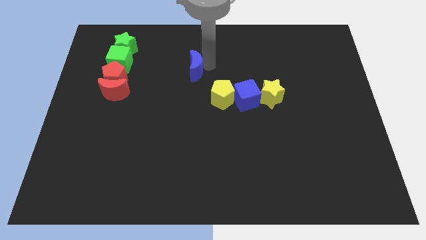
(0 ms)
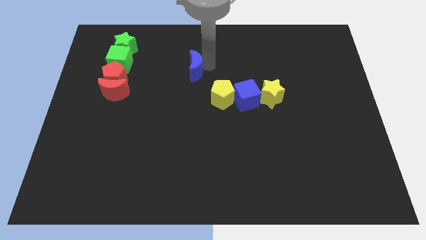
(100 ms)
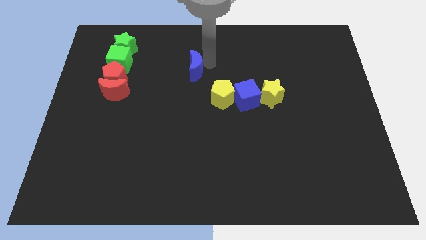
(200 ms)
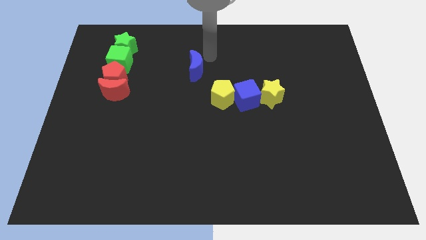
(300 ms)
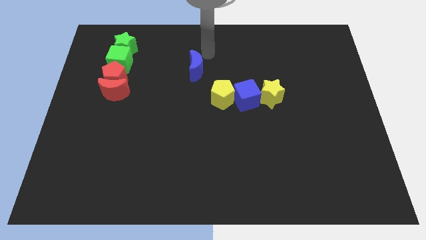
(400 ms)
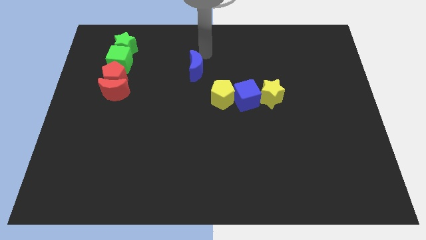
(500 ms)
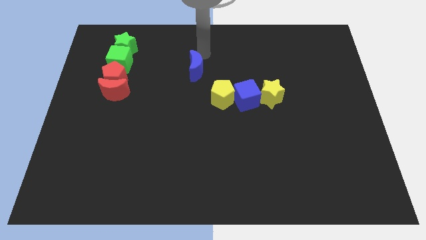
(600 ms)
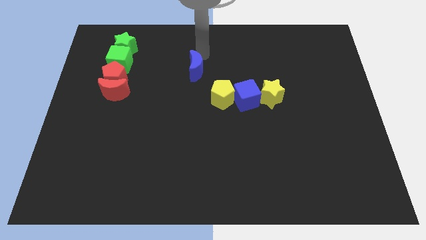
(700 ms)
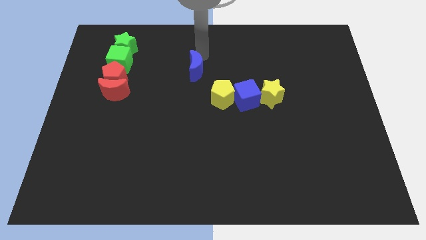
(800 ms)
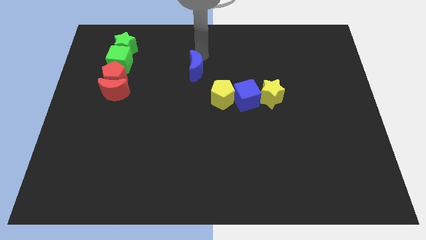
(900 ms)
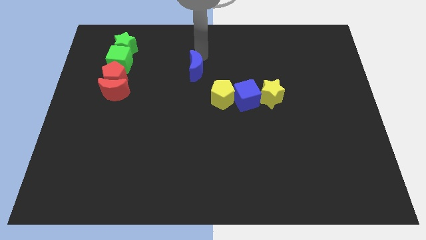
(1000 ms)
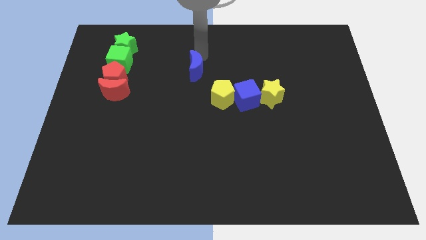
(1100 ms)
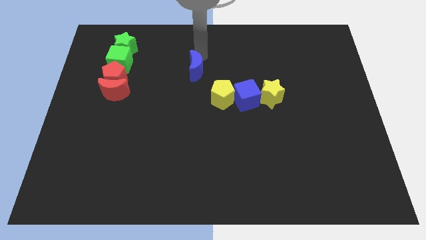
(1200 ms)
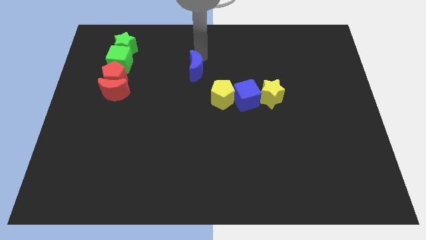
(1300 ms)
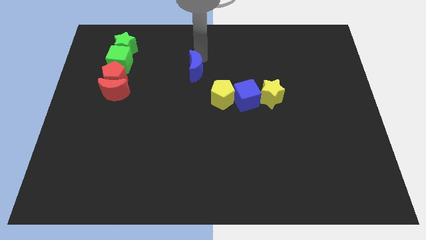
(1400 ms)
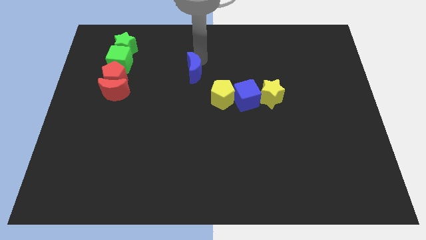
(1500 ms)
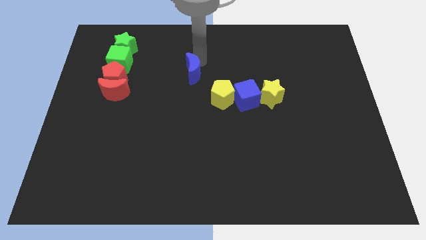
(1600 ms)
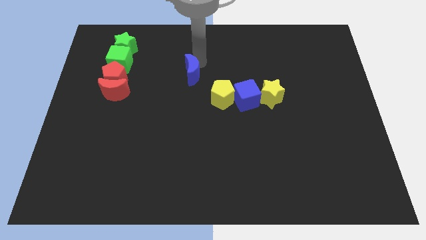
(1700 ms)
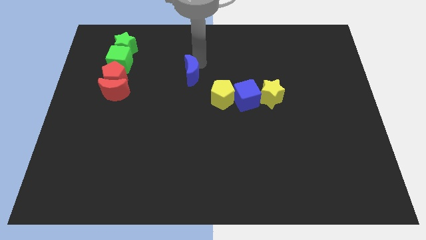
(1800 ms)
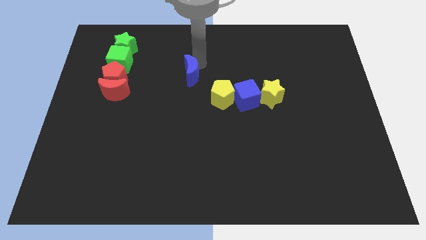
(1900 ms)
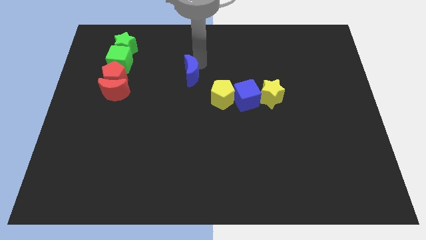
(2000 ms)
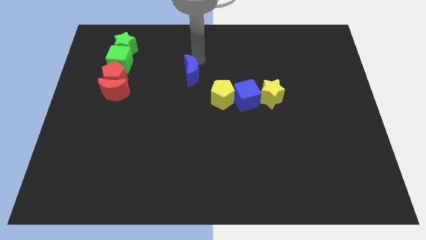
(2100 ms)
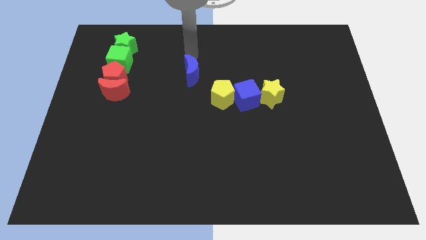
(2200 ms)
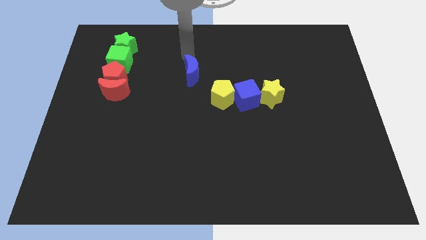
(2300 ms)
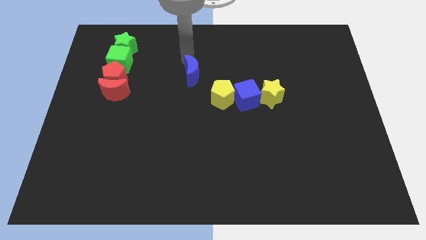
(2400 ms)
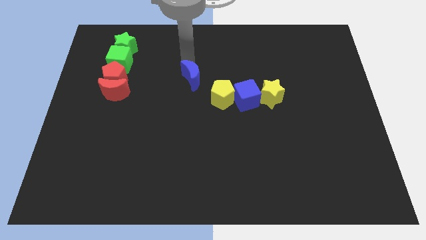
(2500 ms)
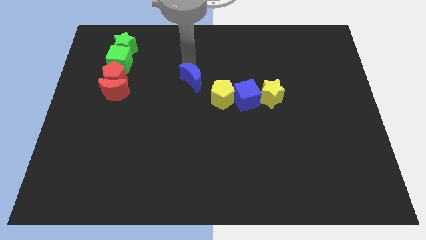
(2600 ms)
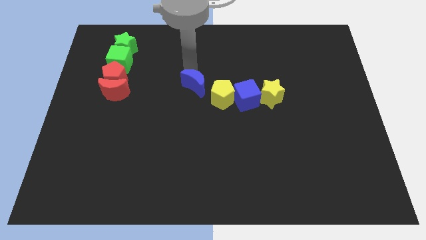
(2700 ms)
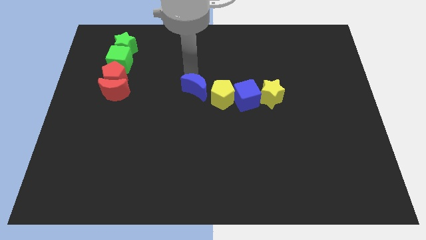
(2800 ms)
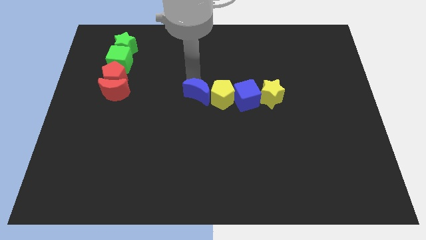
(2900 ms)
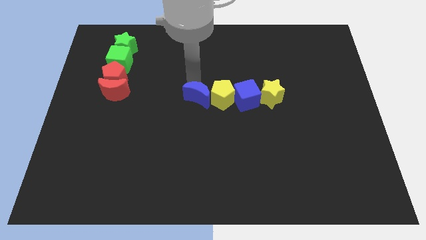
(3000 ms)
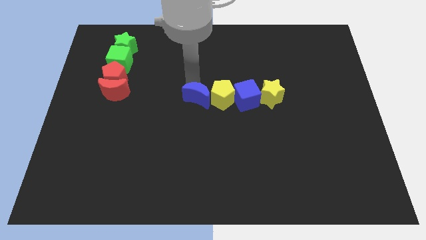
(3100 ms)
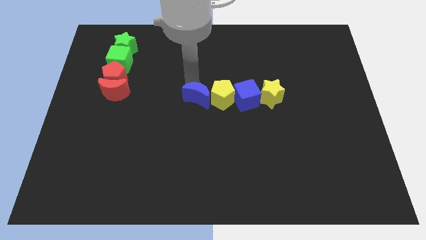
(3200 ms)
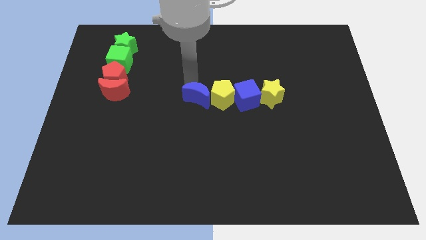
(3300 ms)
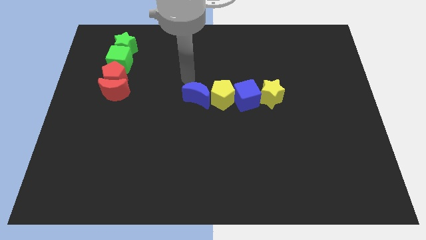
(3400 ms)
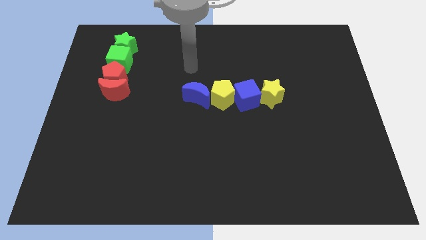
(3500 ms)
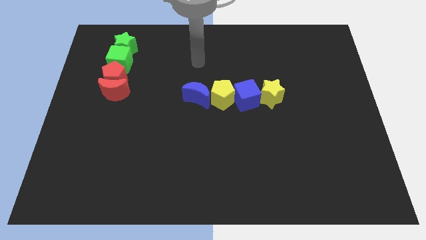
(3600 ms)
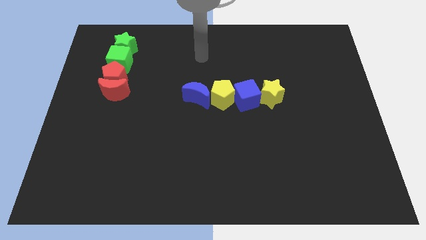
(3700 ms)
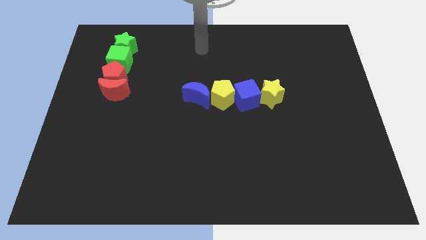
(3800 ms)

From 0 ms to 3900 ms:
place the blue crescent left to the yellow pentagon

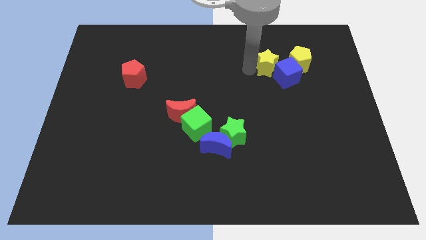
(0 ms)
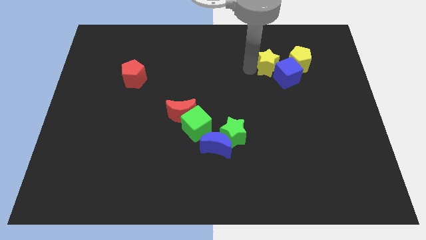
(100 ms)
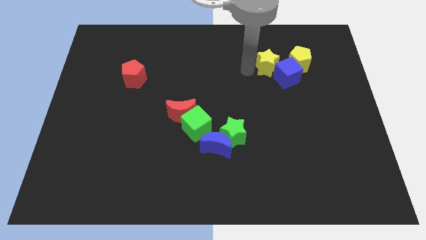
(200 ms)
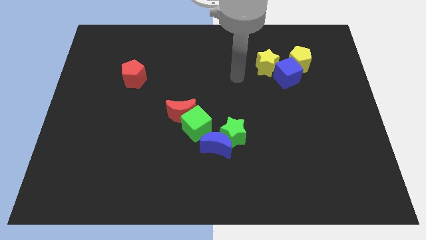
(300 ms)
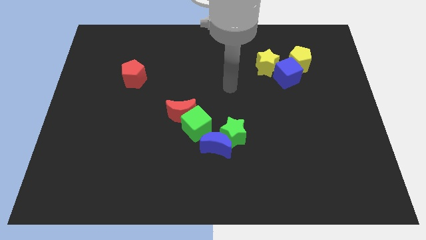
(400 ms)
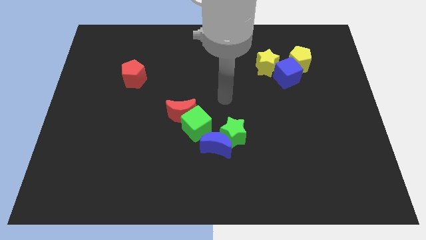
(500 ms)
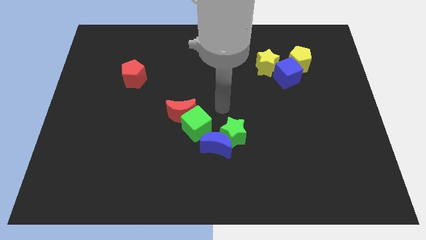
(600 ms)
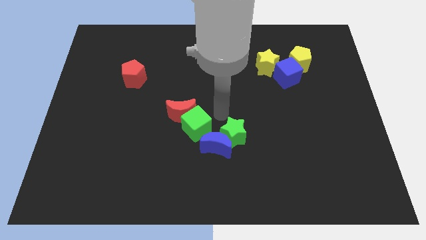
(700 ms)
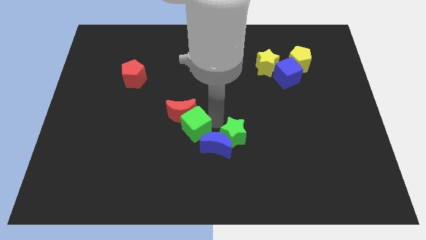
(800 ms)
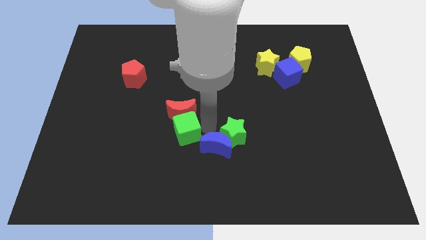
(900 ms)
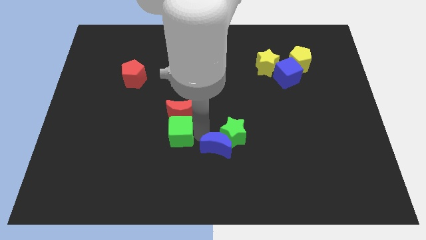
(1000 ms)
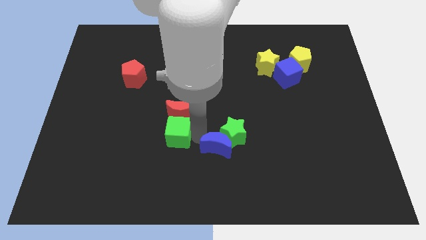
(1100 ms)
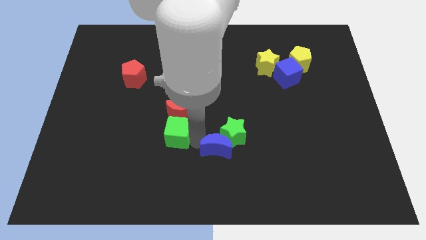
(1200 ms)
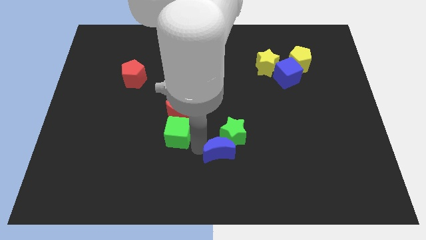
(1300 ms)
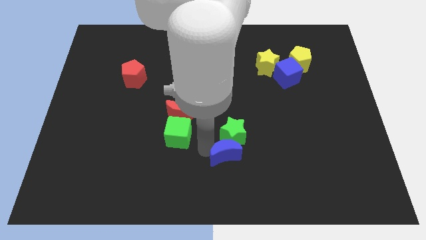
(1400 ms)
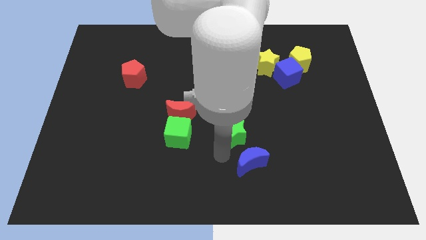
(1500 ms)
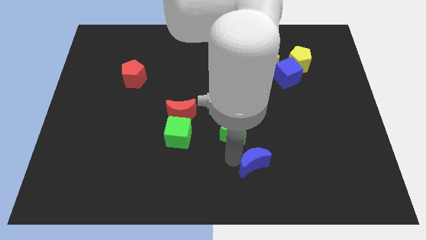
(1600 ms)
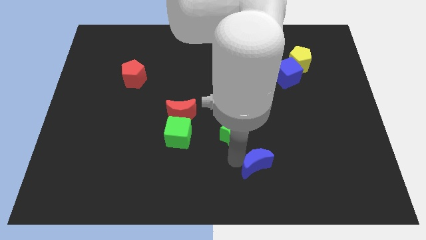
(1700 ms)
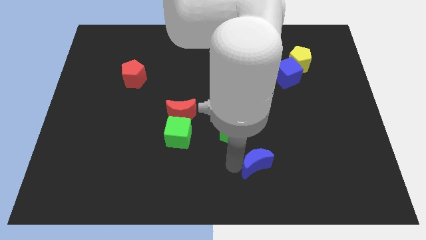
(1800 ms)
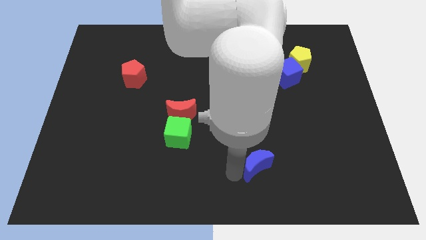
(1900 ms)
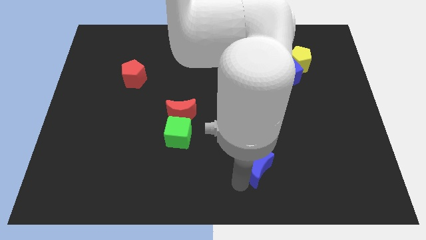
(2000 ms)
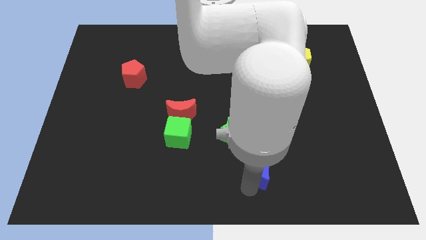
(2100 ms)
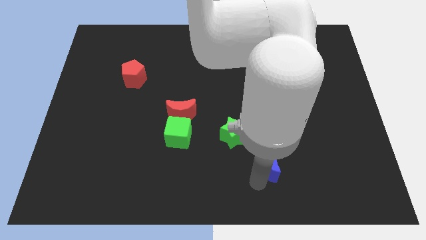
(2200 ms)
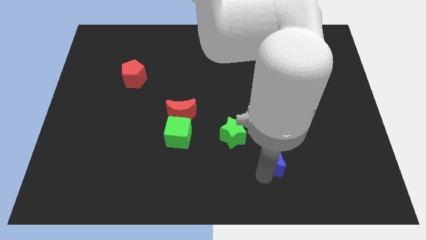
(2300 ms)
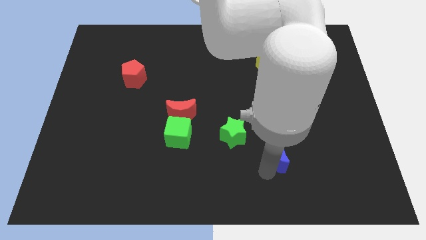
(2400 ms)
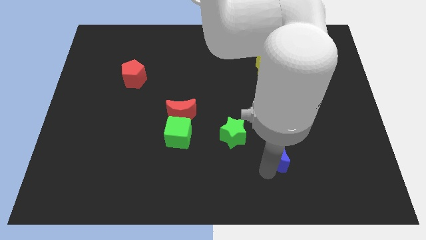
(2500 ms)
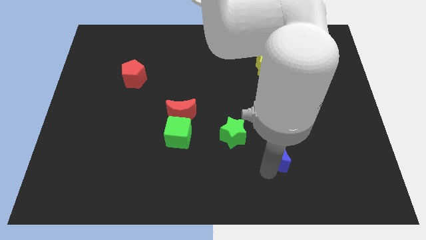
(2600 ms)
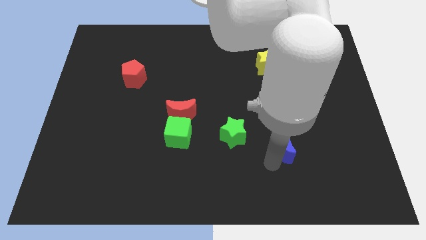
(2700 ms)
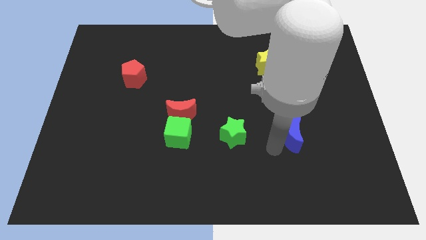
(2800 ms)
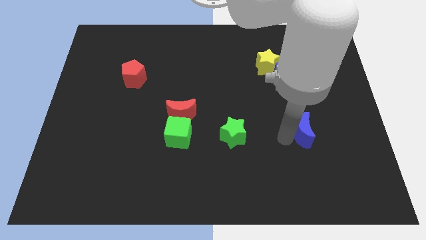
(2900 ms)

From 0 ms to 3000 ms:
move the blue moon to the right of the green star

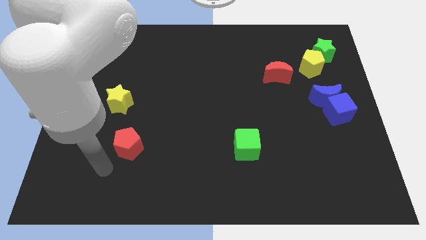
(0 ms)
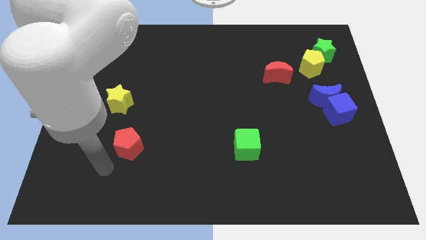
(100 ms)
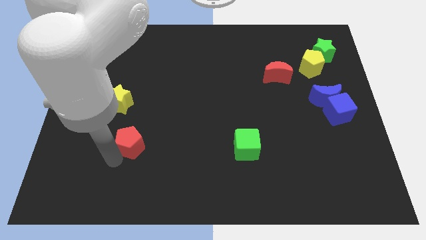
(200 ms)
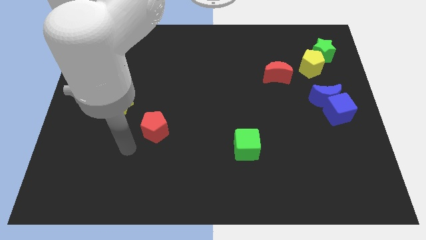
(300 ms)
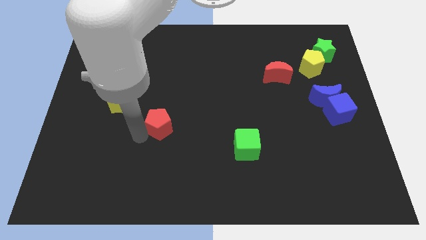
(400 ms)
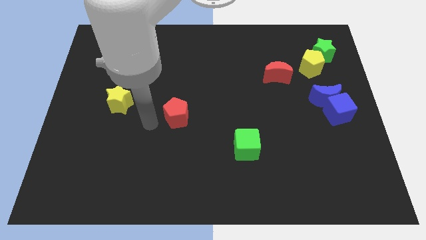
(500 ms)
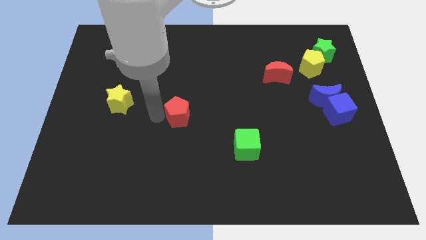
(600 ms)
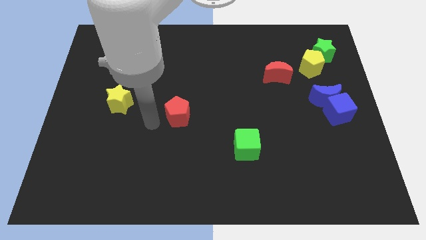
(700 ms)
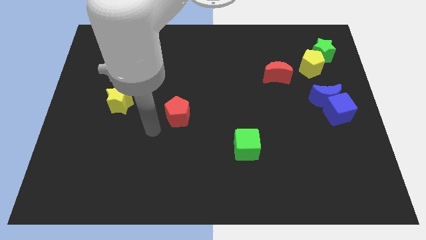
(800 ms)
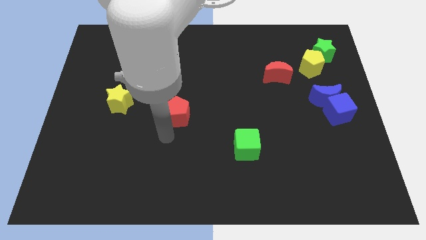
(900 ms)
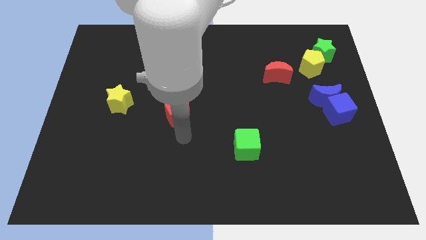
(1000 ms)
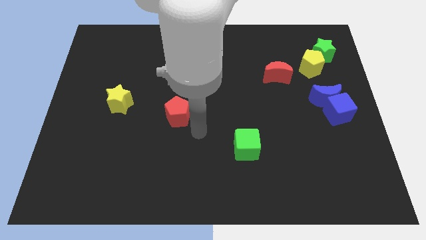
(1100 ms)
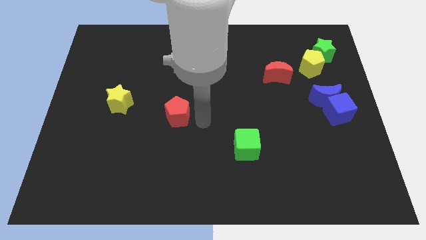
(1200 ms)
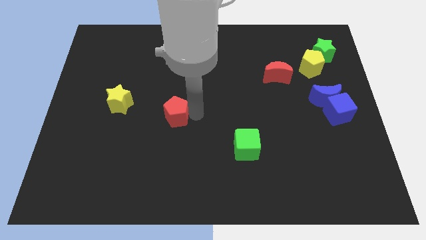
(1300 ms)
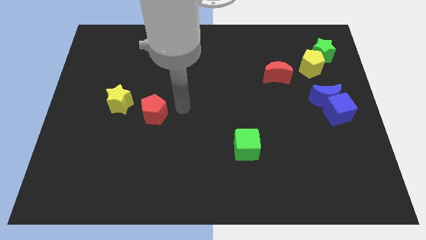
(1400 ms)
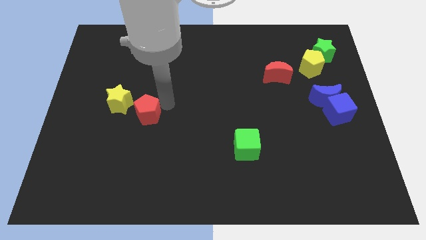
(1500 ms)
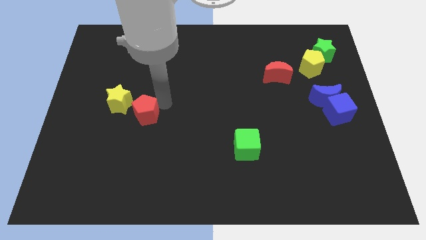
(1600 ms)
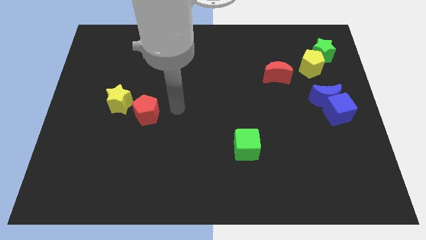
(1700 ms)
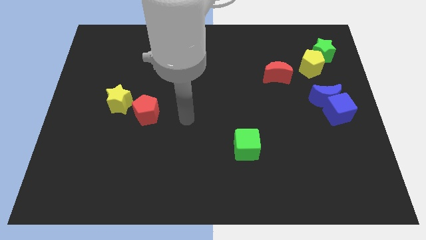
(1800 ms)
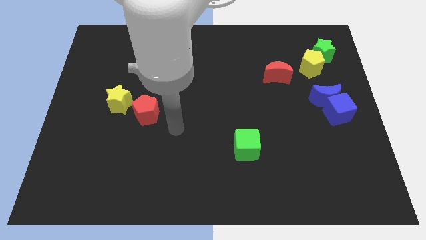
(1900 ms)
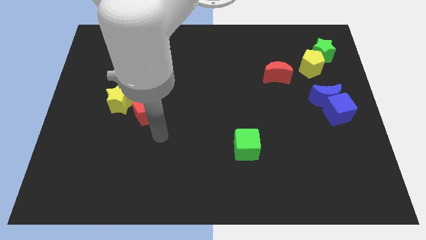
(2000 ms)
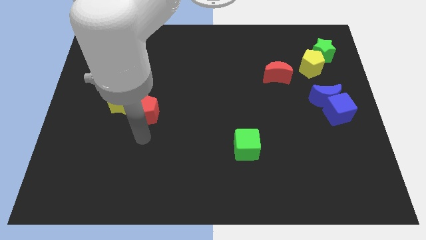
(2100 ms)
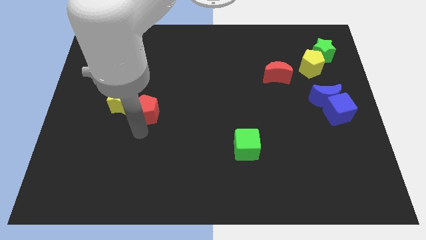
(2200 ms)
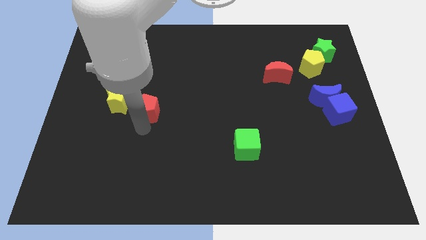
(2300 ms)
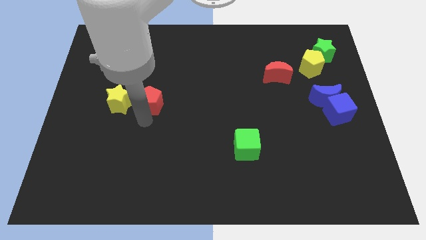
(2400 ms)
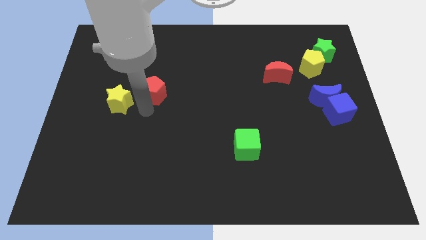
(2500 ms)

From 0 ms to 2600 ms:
move red pentagon right beside the yellow star
